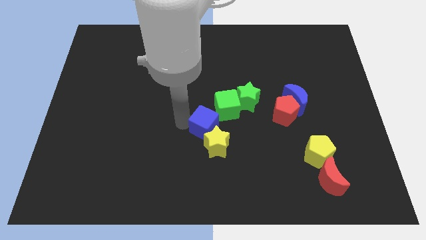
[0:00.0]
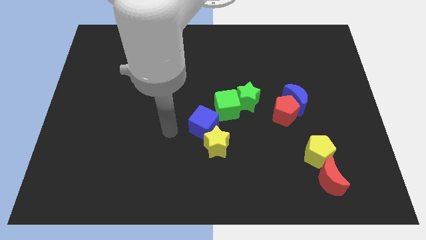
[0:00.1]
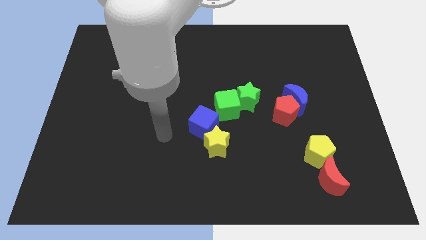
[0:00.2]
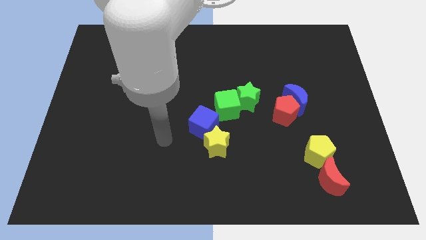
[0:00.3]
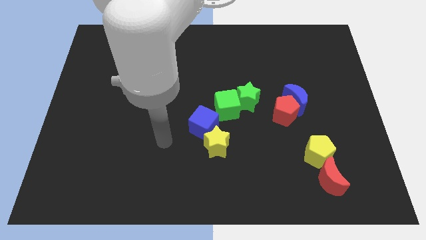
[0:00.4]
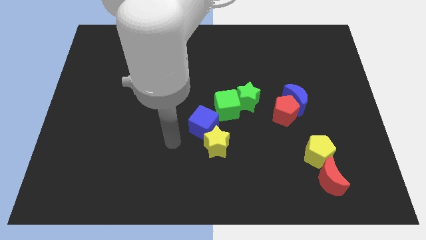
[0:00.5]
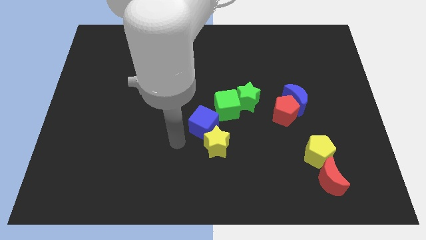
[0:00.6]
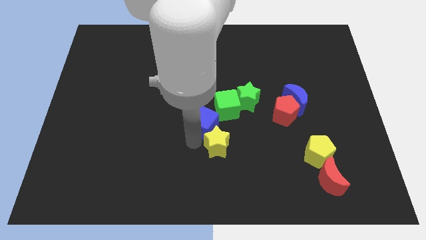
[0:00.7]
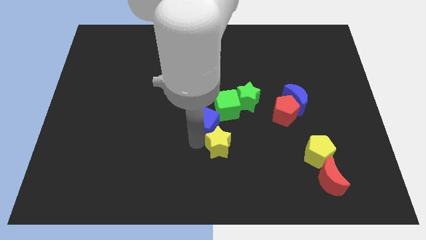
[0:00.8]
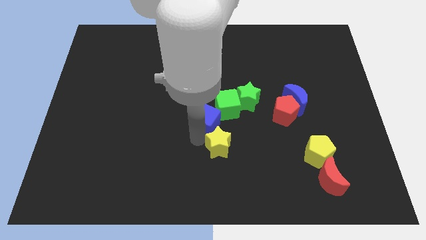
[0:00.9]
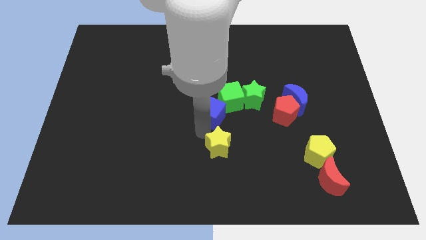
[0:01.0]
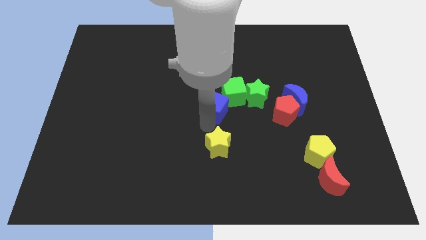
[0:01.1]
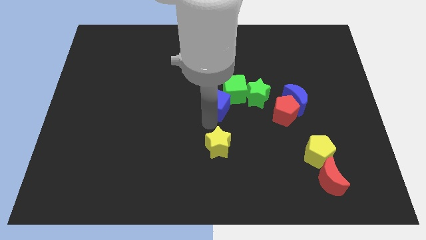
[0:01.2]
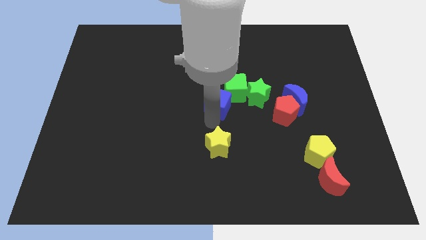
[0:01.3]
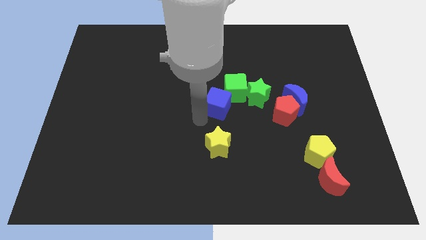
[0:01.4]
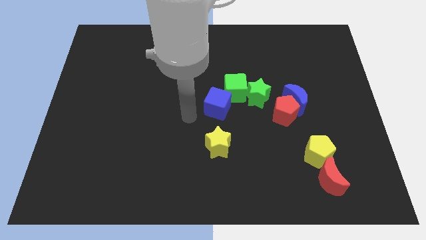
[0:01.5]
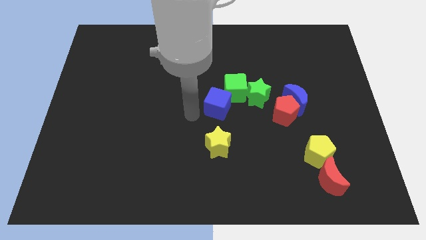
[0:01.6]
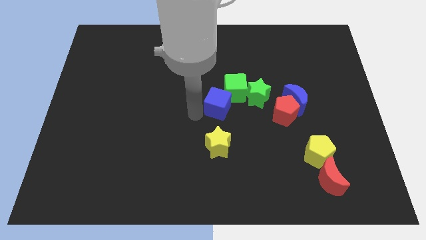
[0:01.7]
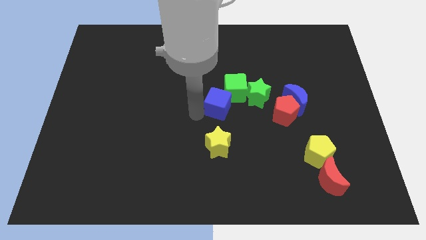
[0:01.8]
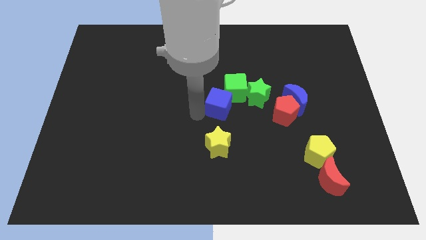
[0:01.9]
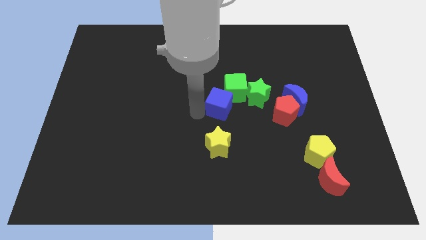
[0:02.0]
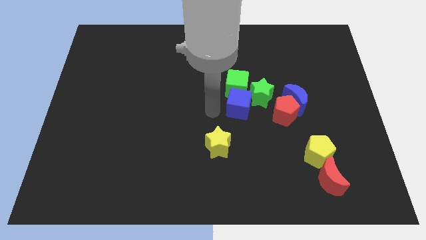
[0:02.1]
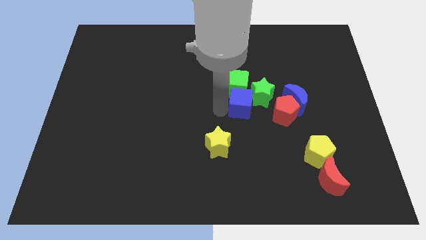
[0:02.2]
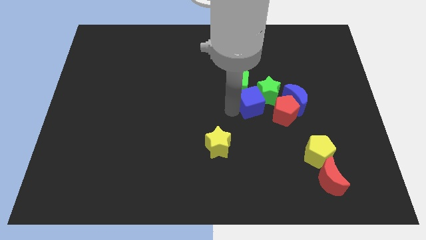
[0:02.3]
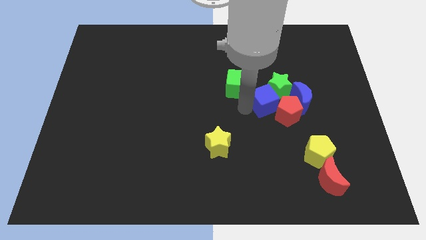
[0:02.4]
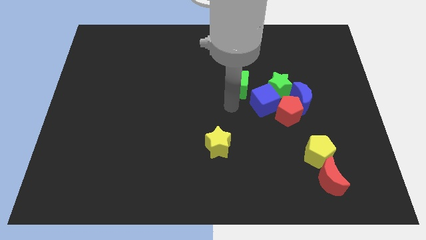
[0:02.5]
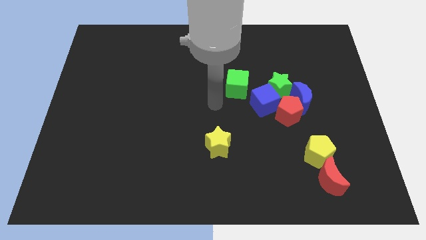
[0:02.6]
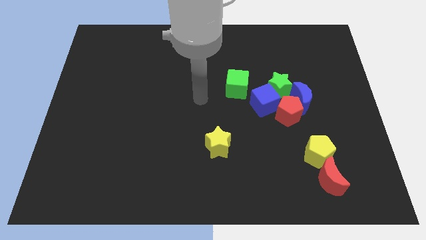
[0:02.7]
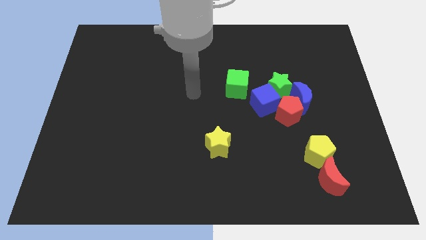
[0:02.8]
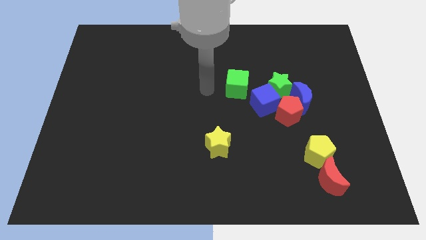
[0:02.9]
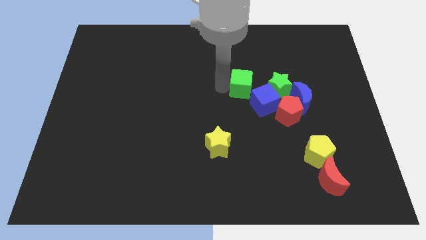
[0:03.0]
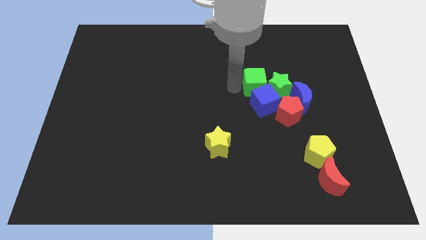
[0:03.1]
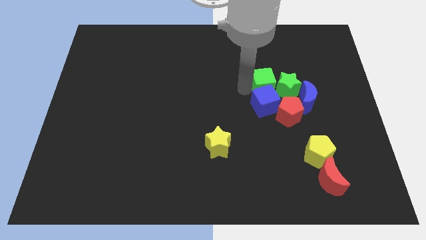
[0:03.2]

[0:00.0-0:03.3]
push the blue cube into the green star

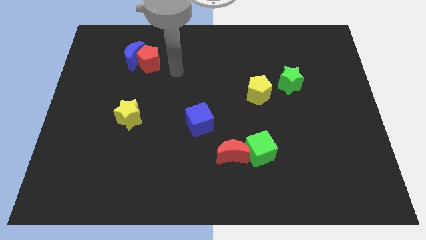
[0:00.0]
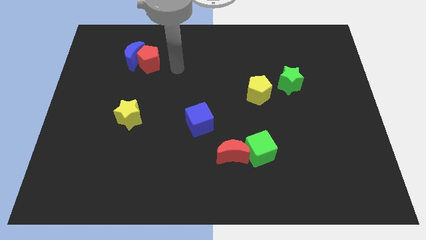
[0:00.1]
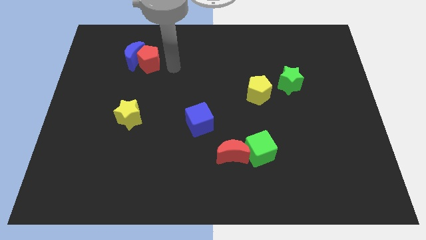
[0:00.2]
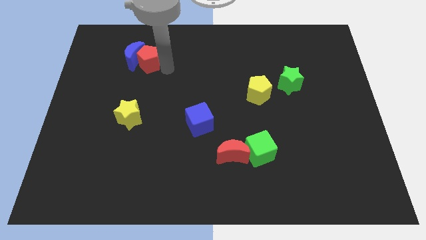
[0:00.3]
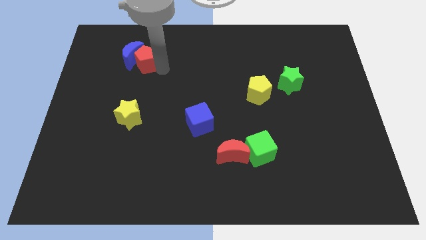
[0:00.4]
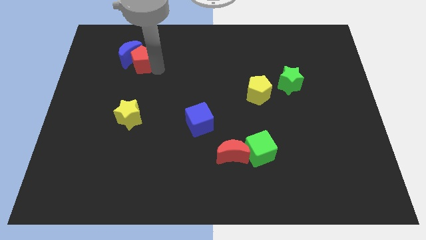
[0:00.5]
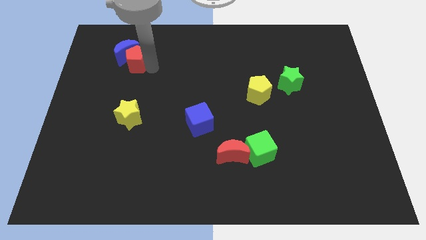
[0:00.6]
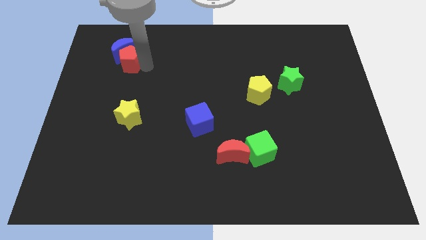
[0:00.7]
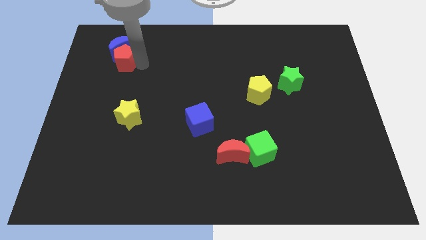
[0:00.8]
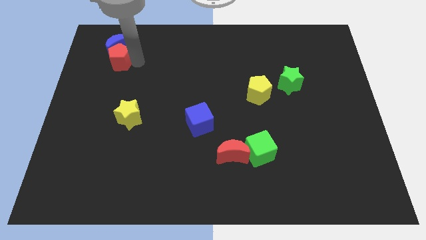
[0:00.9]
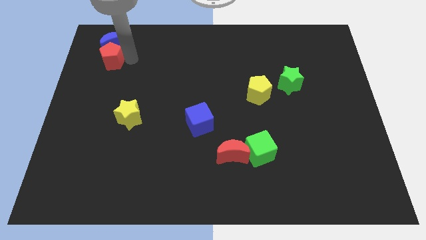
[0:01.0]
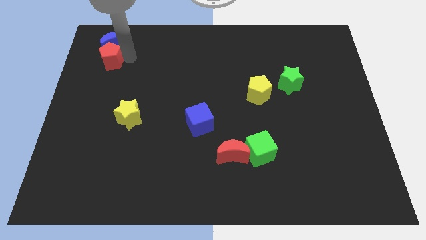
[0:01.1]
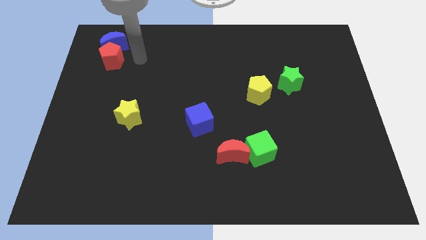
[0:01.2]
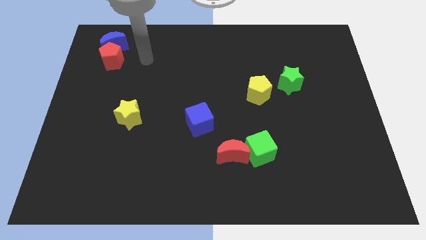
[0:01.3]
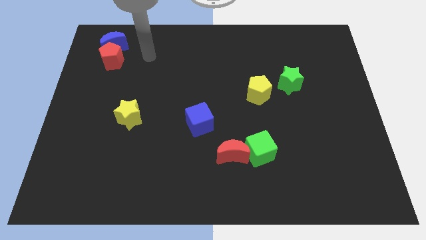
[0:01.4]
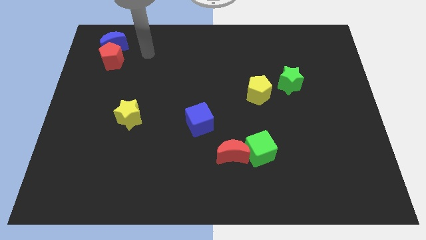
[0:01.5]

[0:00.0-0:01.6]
push the red pentagon along with blue crescent towards top left side of the board

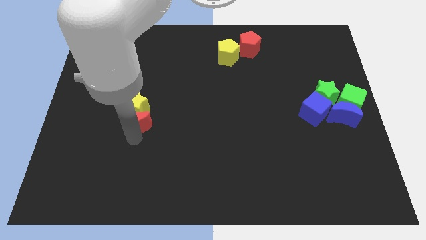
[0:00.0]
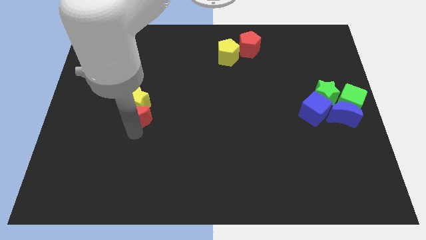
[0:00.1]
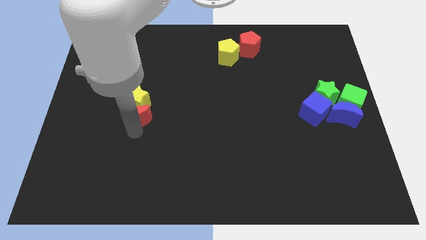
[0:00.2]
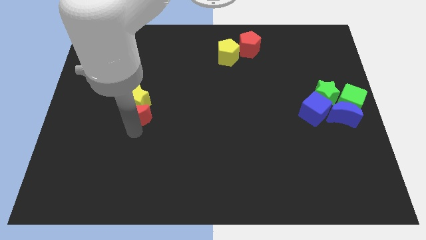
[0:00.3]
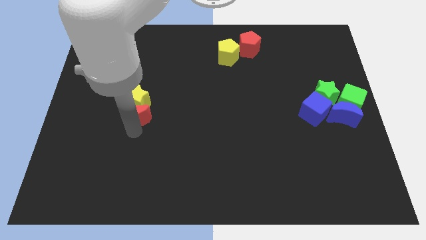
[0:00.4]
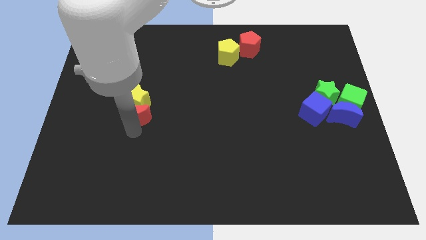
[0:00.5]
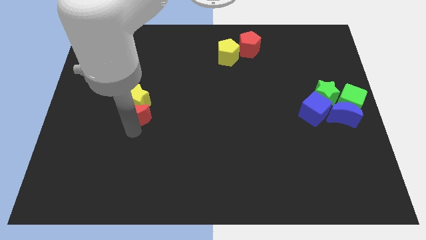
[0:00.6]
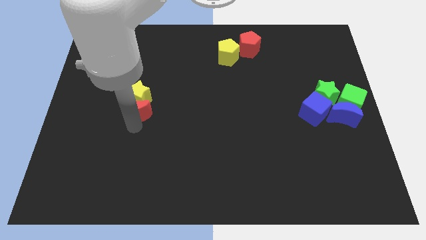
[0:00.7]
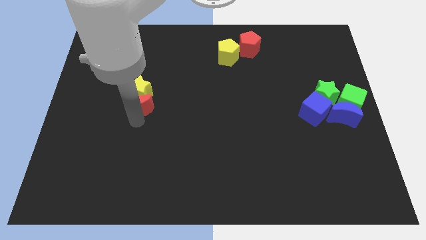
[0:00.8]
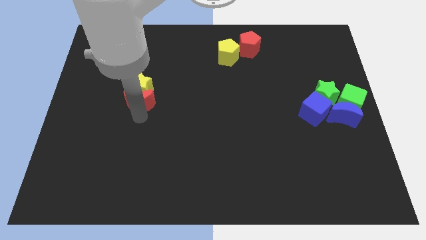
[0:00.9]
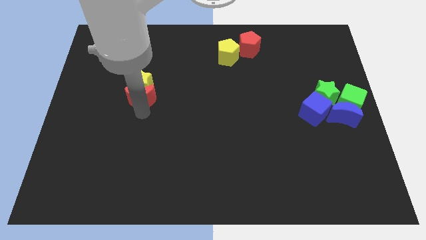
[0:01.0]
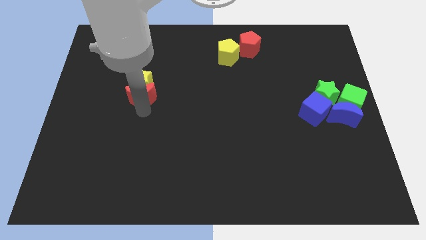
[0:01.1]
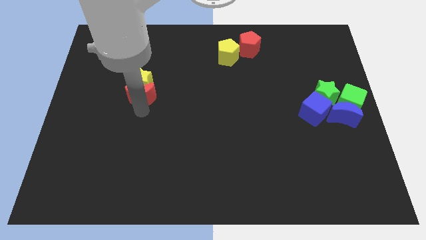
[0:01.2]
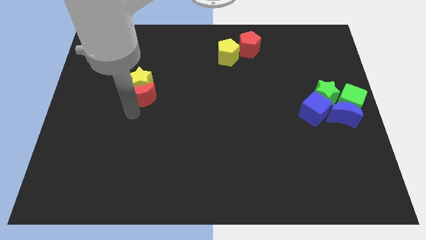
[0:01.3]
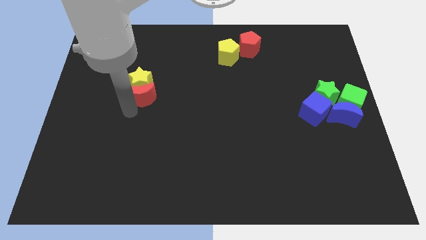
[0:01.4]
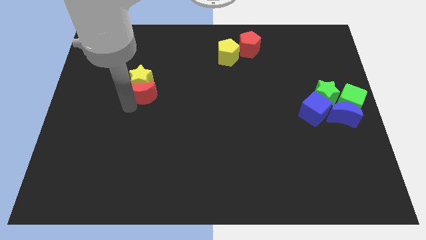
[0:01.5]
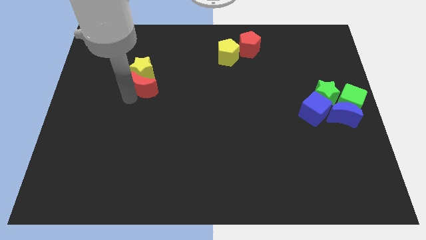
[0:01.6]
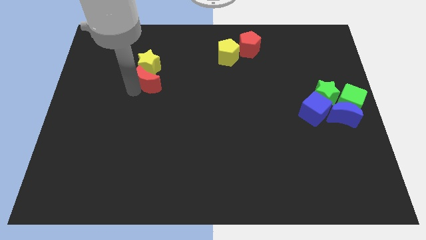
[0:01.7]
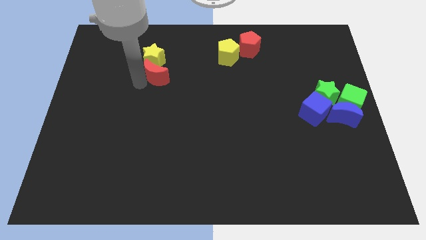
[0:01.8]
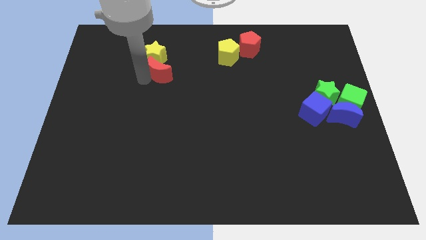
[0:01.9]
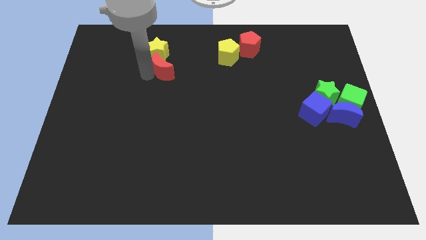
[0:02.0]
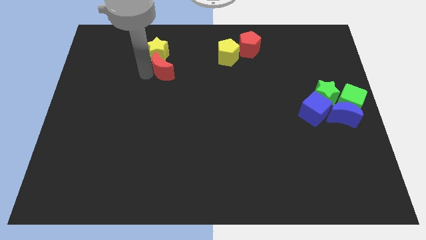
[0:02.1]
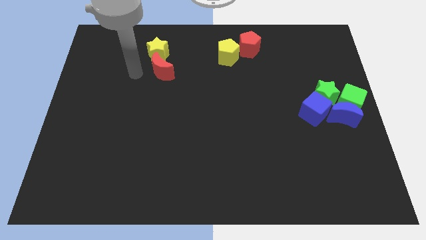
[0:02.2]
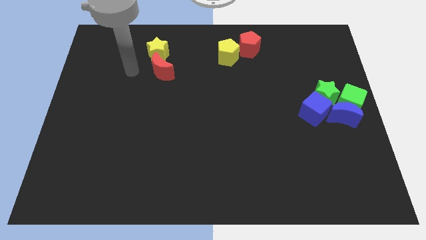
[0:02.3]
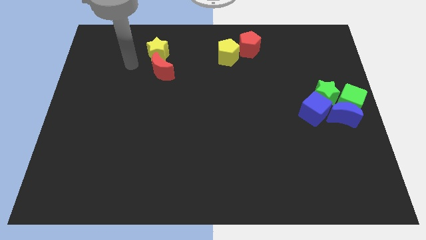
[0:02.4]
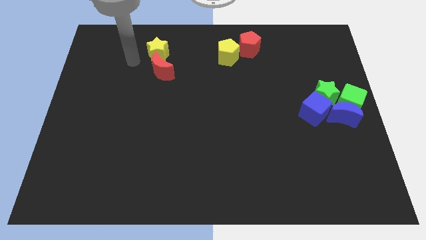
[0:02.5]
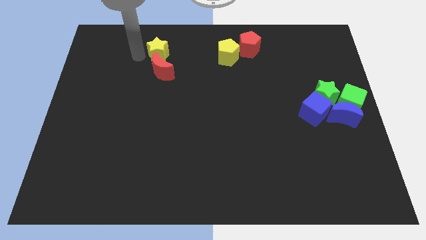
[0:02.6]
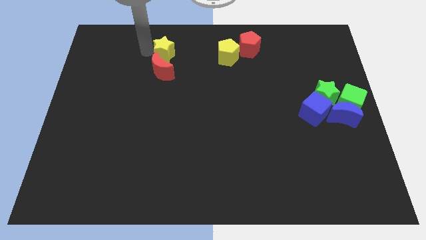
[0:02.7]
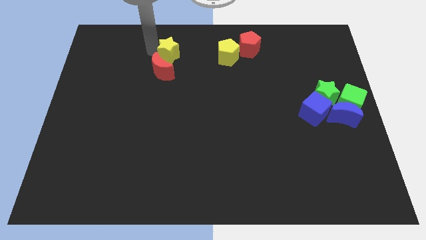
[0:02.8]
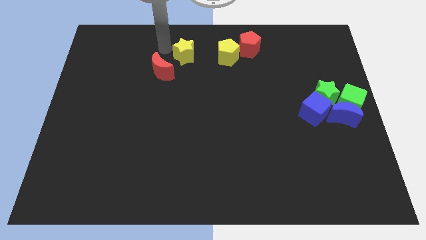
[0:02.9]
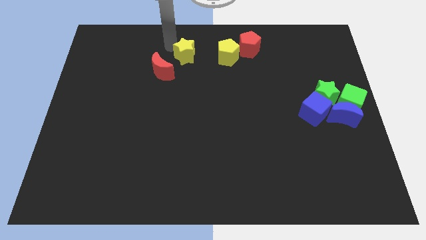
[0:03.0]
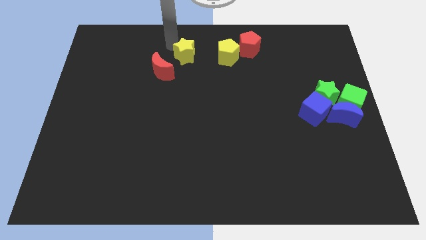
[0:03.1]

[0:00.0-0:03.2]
separate yellow star and the red moon

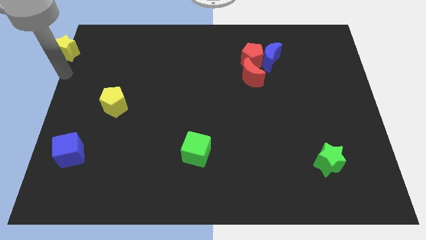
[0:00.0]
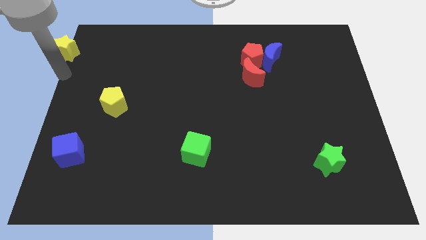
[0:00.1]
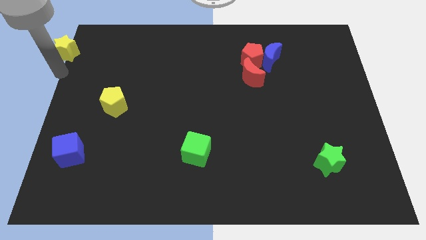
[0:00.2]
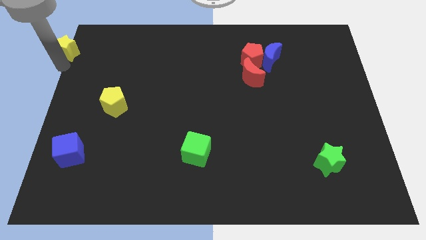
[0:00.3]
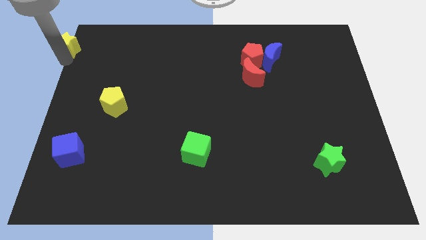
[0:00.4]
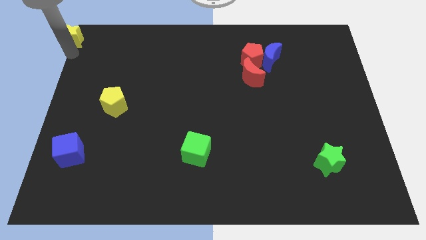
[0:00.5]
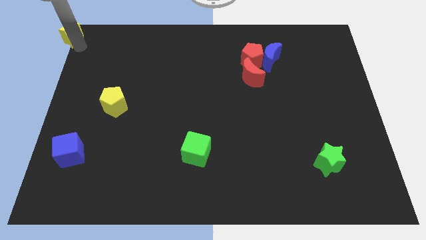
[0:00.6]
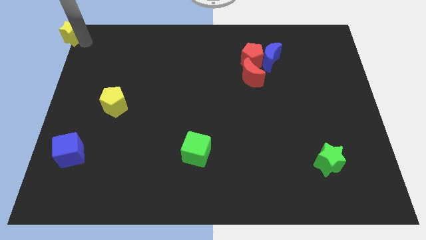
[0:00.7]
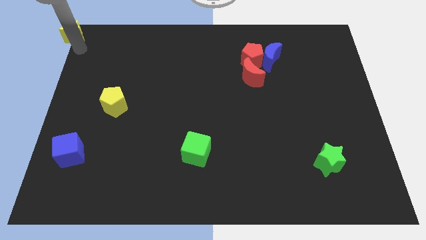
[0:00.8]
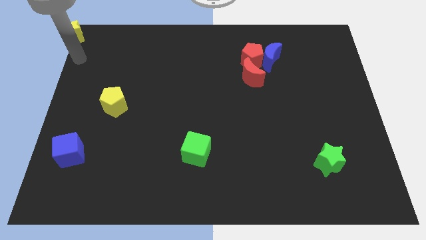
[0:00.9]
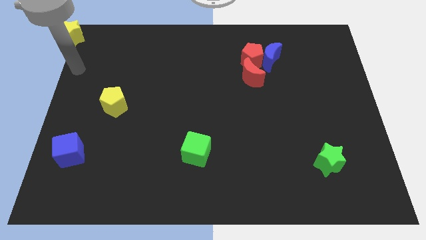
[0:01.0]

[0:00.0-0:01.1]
move the yellow star to the top left corner of the board
